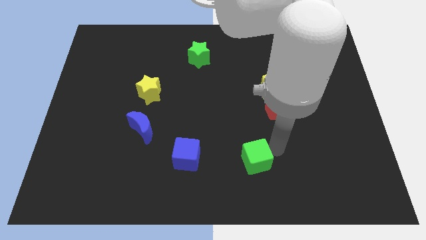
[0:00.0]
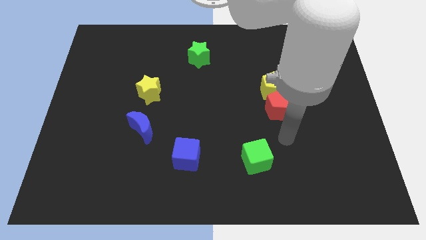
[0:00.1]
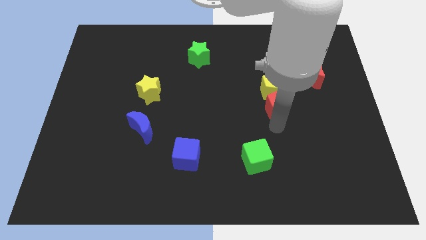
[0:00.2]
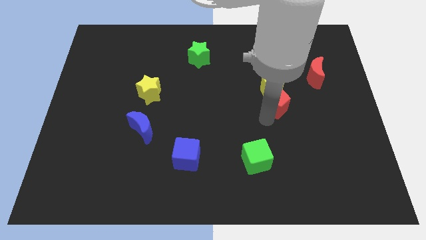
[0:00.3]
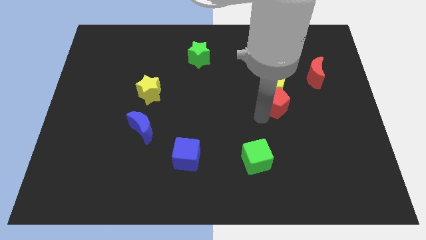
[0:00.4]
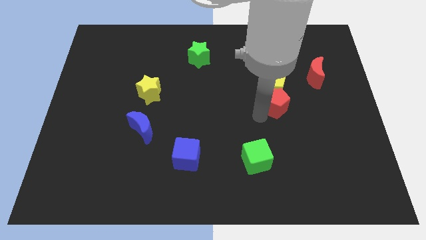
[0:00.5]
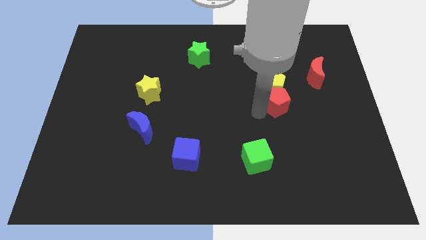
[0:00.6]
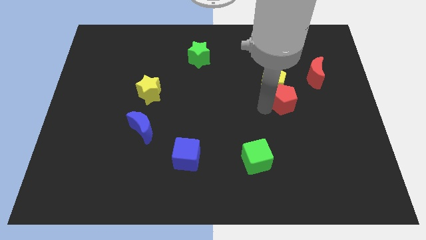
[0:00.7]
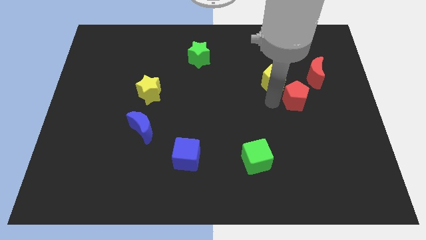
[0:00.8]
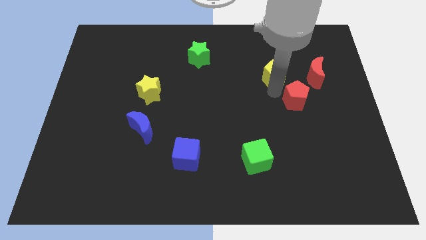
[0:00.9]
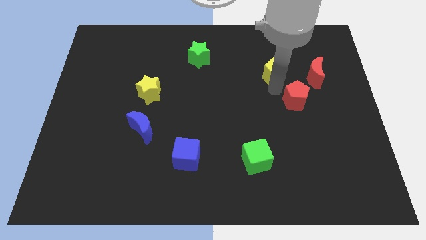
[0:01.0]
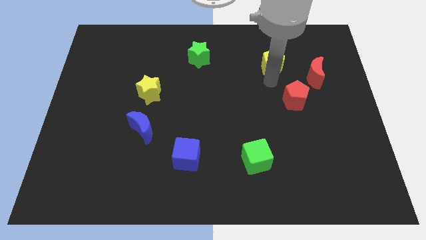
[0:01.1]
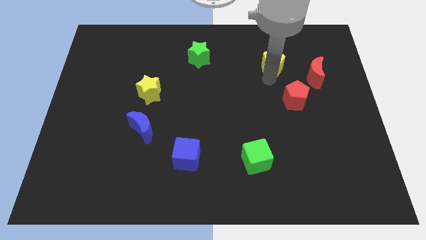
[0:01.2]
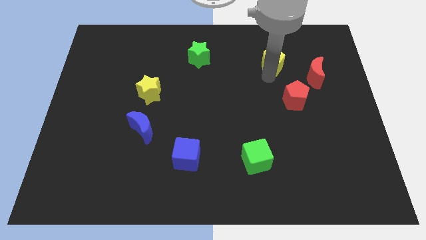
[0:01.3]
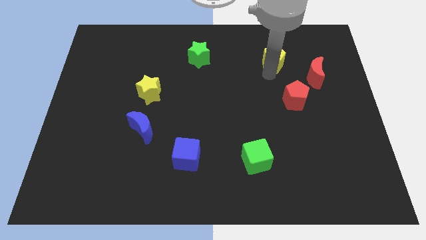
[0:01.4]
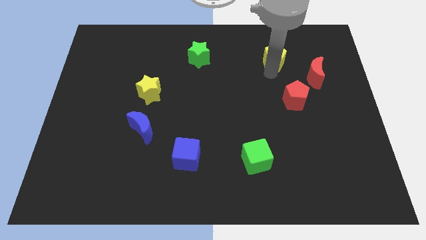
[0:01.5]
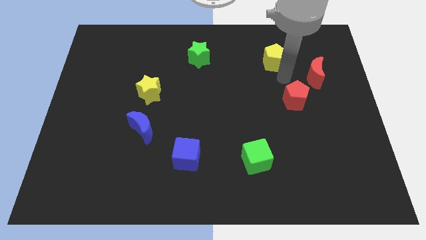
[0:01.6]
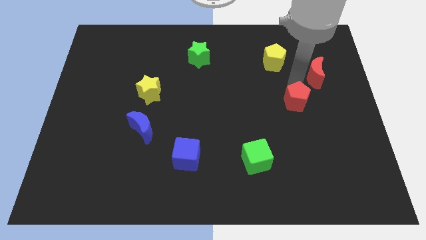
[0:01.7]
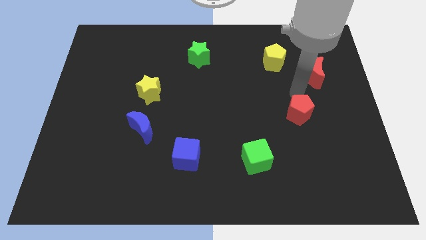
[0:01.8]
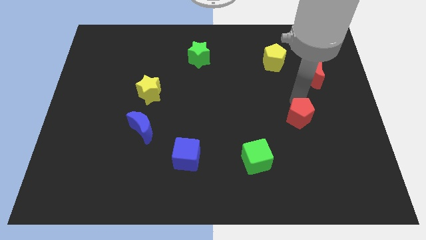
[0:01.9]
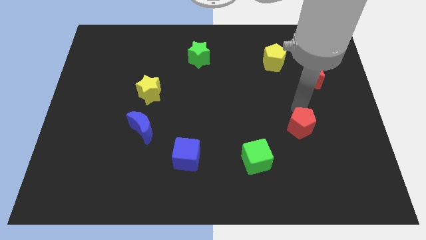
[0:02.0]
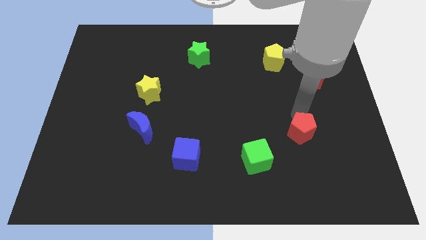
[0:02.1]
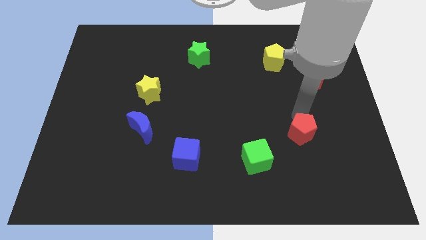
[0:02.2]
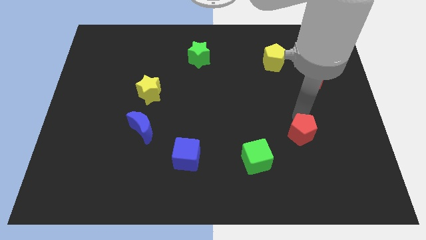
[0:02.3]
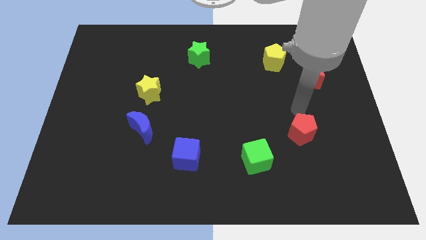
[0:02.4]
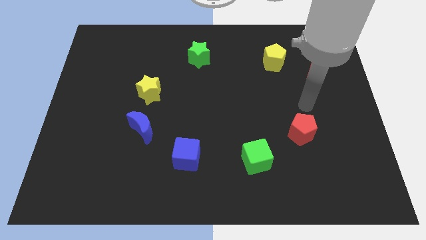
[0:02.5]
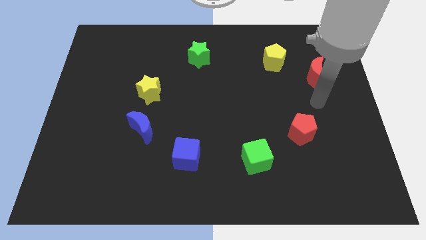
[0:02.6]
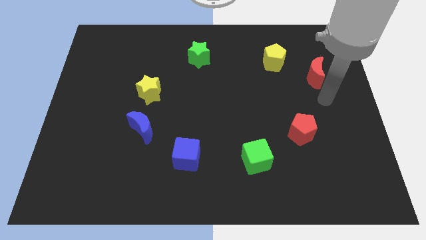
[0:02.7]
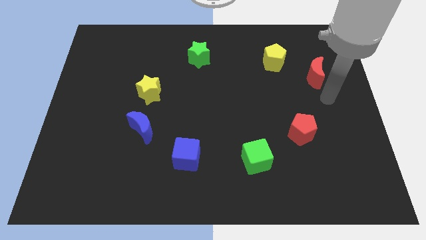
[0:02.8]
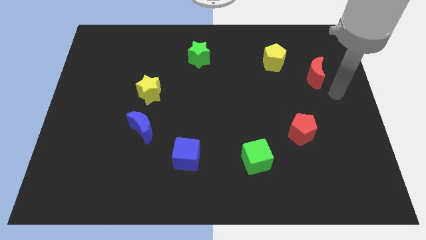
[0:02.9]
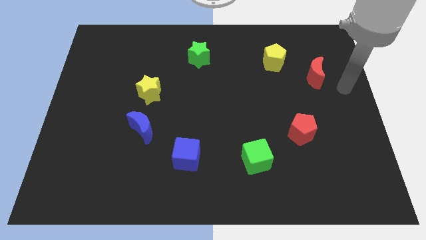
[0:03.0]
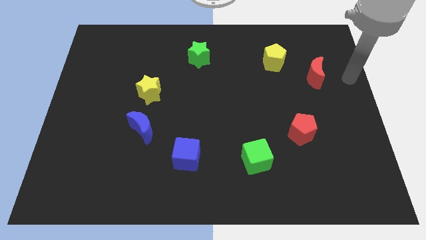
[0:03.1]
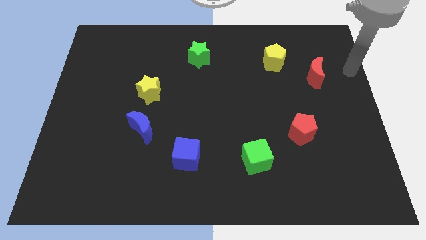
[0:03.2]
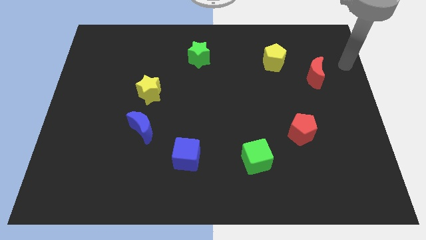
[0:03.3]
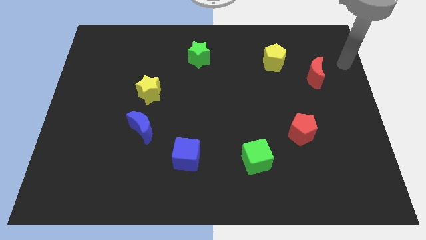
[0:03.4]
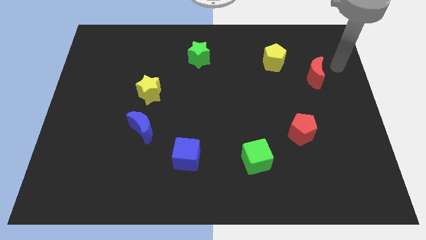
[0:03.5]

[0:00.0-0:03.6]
separate the yellow pentagon and red pentagon from each other

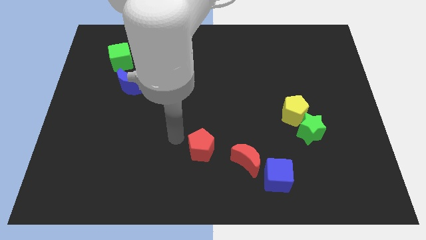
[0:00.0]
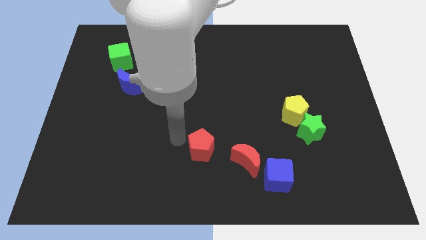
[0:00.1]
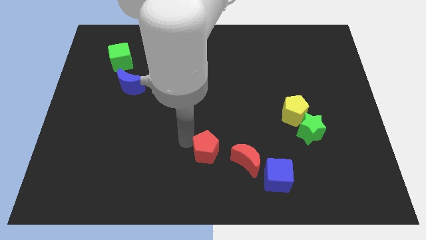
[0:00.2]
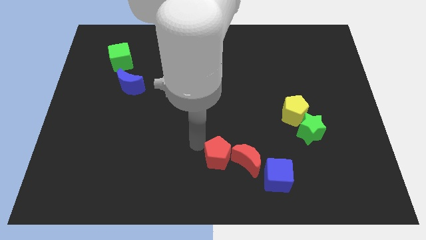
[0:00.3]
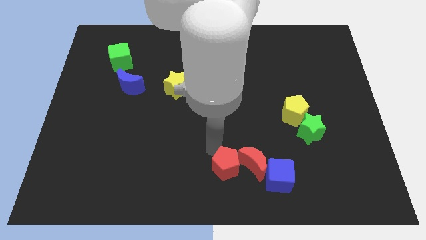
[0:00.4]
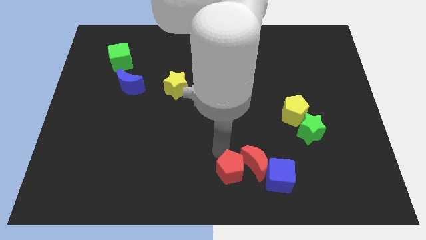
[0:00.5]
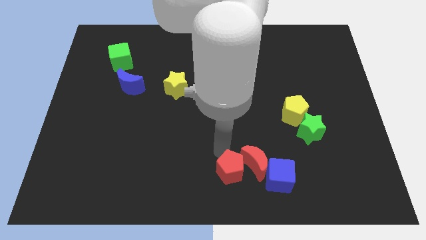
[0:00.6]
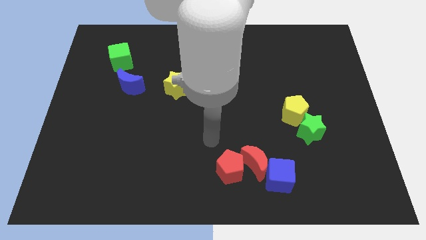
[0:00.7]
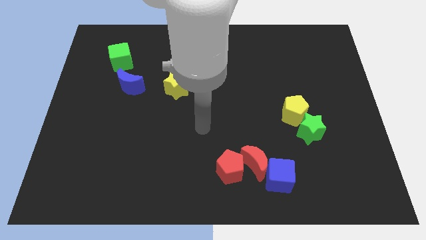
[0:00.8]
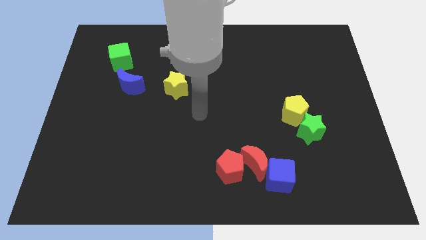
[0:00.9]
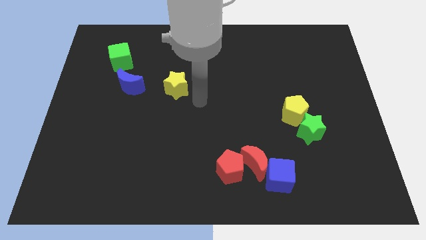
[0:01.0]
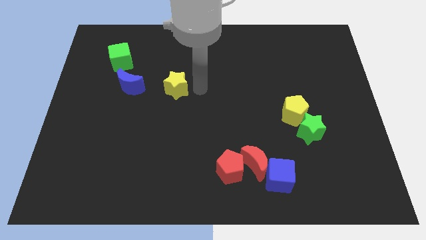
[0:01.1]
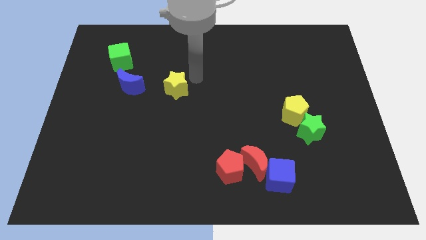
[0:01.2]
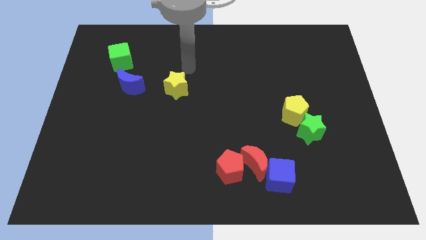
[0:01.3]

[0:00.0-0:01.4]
move the red pentagon into the red moon

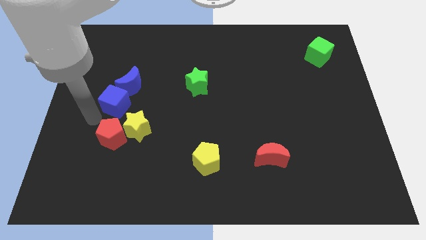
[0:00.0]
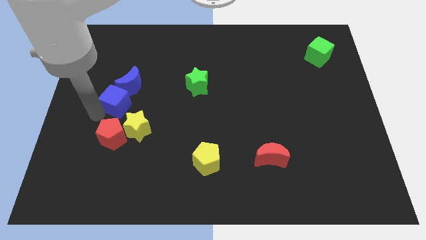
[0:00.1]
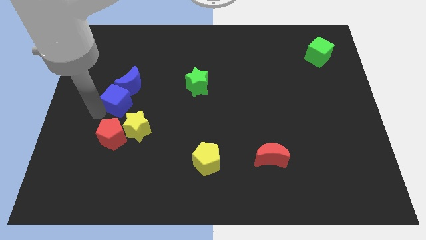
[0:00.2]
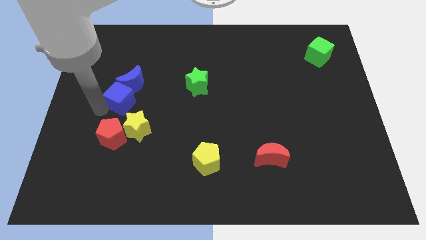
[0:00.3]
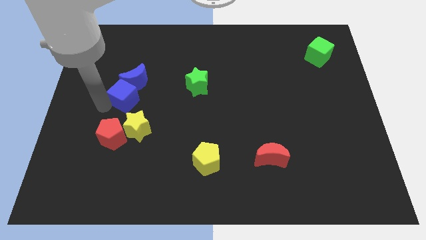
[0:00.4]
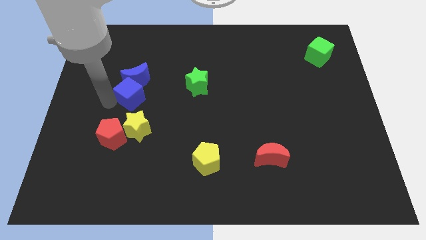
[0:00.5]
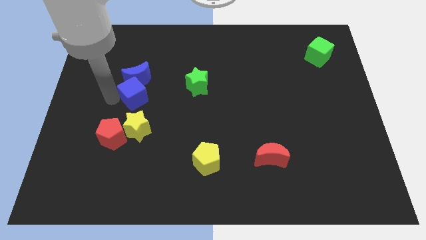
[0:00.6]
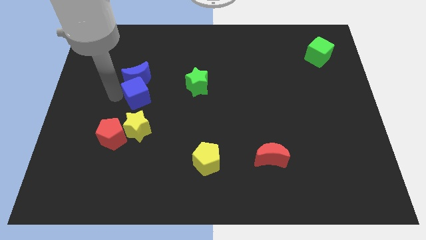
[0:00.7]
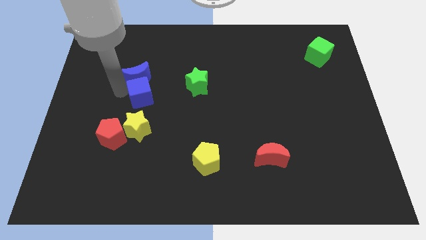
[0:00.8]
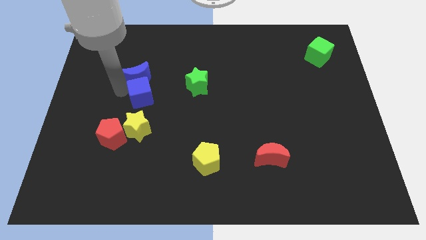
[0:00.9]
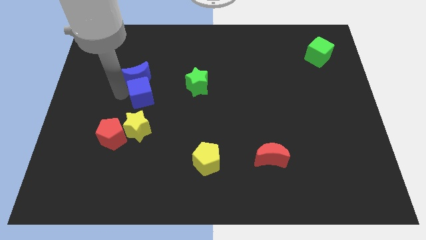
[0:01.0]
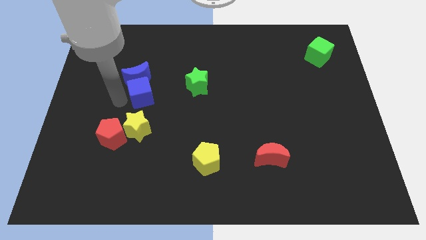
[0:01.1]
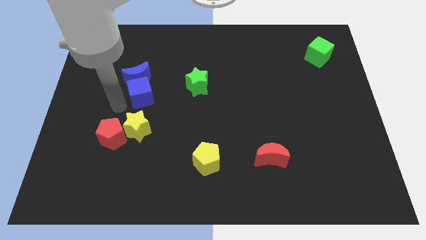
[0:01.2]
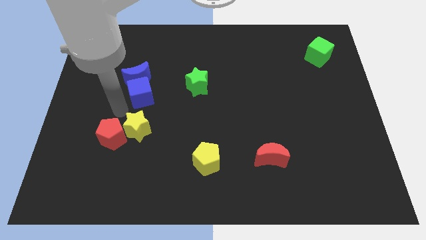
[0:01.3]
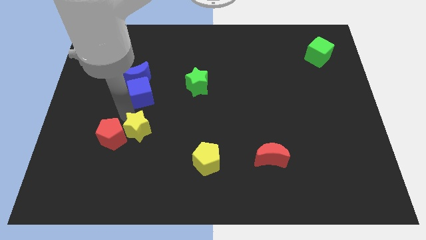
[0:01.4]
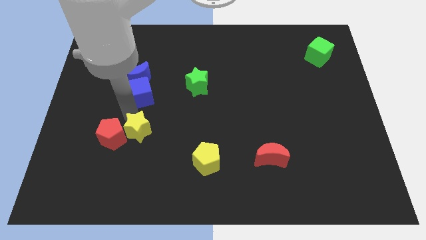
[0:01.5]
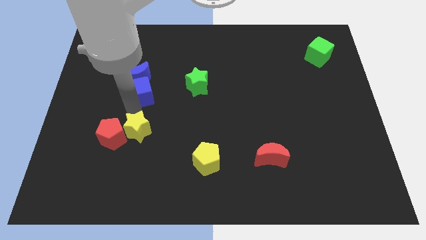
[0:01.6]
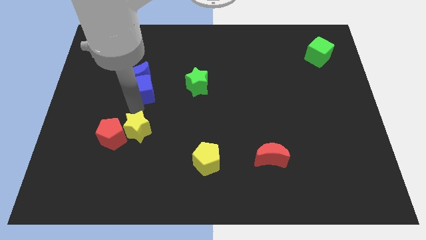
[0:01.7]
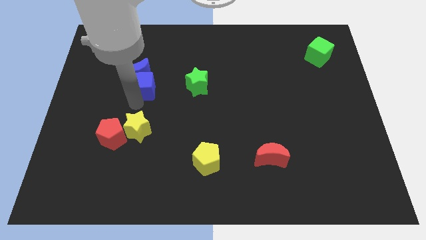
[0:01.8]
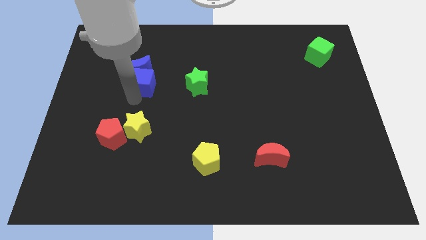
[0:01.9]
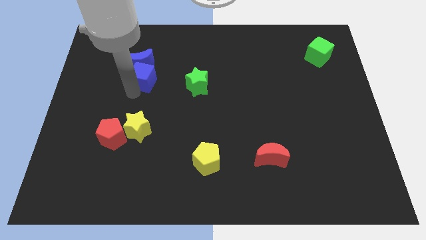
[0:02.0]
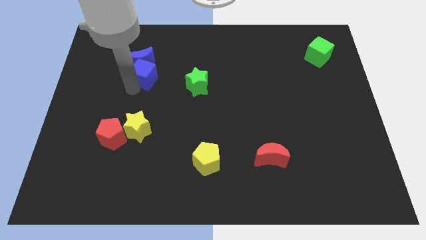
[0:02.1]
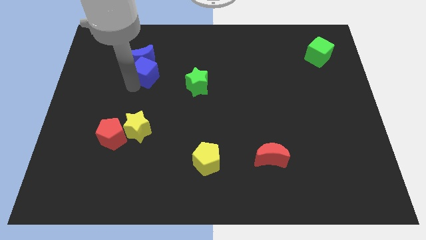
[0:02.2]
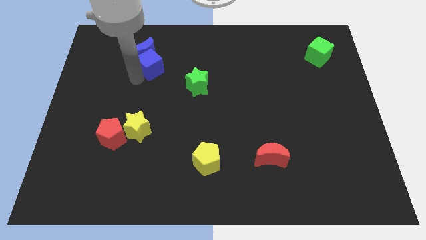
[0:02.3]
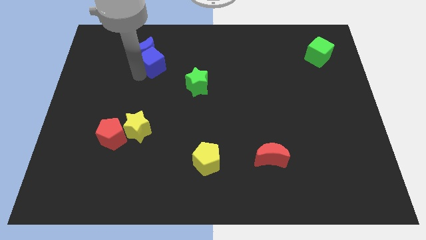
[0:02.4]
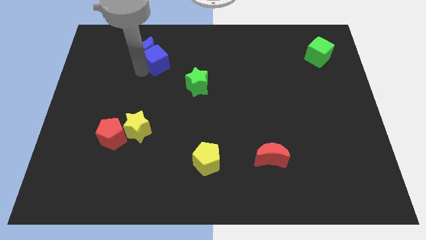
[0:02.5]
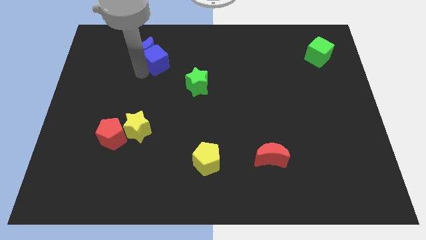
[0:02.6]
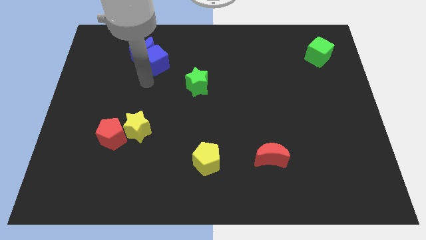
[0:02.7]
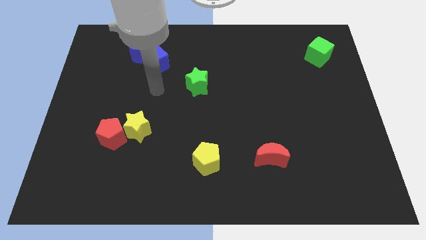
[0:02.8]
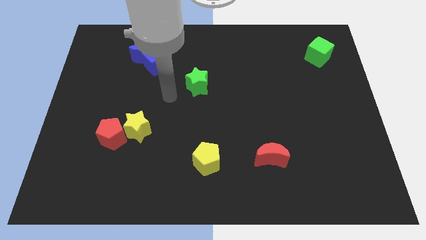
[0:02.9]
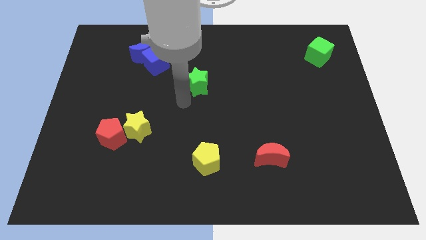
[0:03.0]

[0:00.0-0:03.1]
push the group of blue blocks towards the top left side of the board

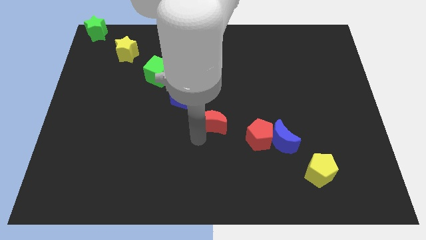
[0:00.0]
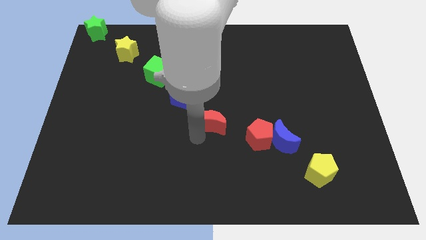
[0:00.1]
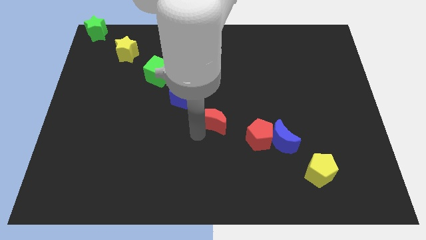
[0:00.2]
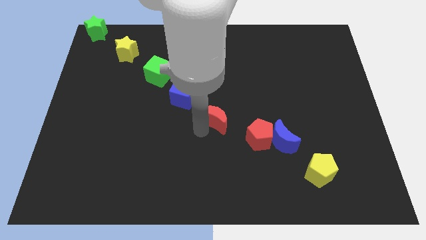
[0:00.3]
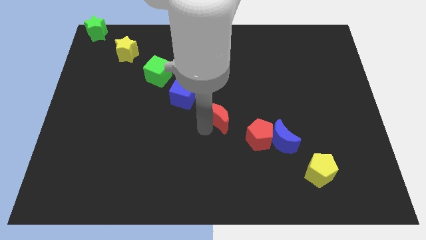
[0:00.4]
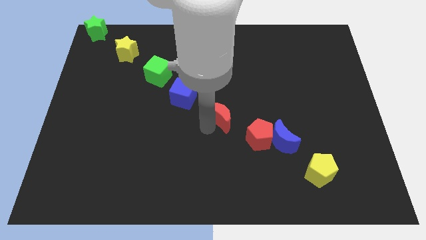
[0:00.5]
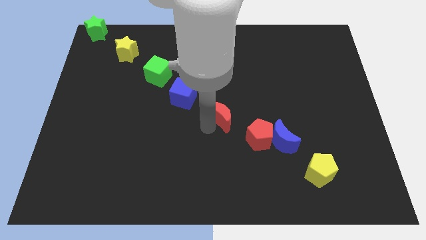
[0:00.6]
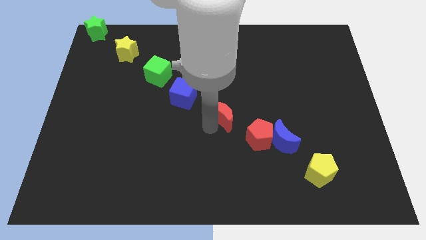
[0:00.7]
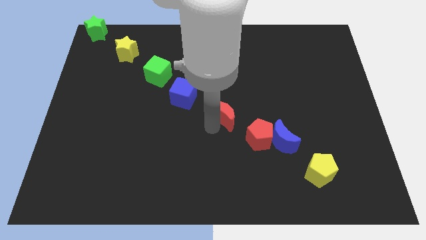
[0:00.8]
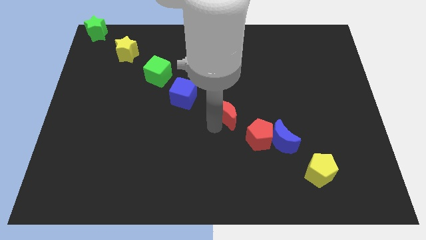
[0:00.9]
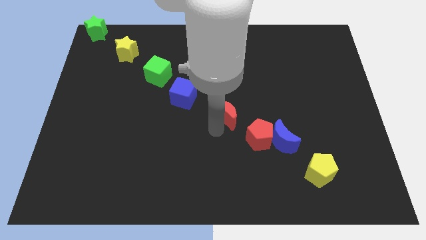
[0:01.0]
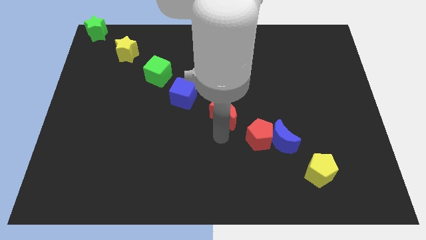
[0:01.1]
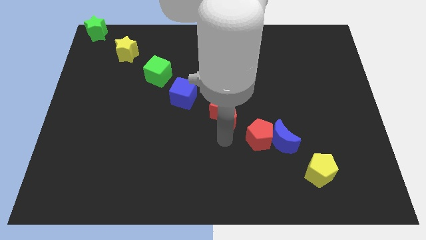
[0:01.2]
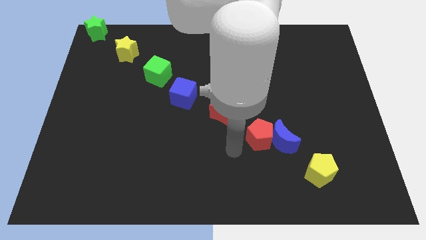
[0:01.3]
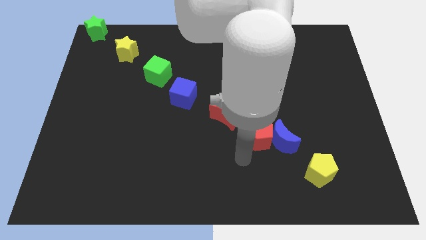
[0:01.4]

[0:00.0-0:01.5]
place the red crescent diagonally in between the red pentagon and blue cube
